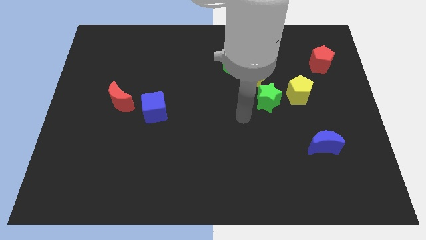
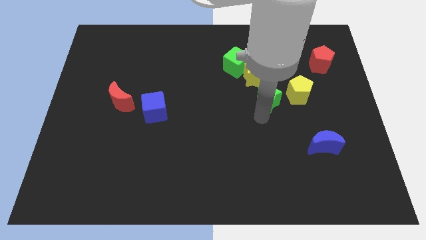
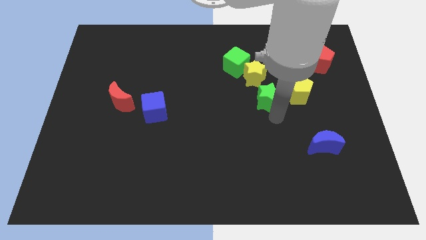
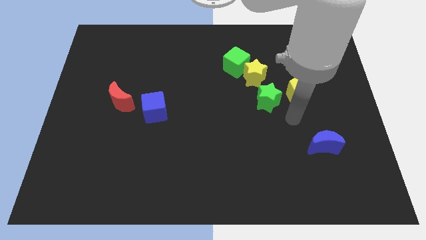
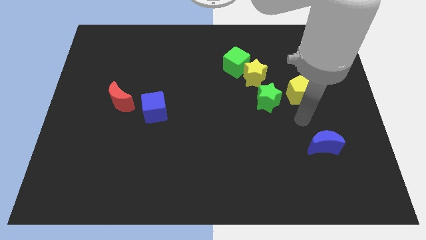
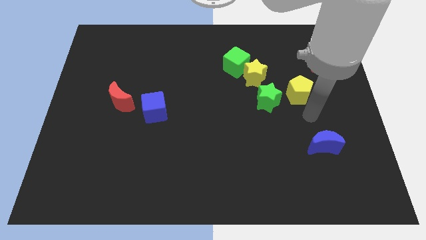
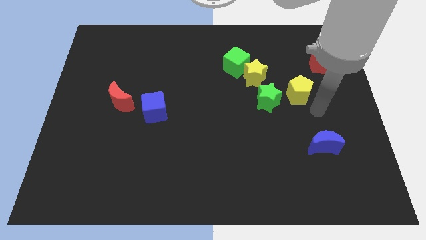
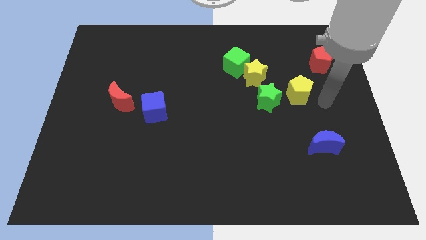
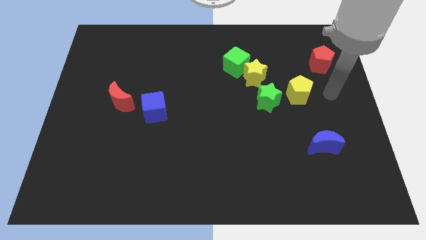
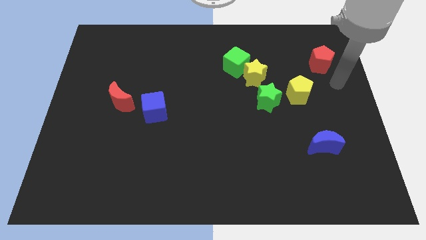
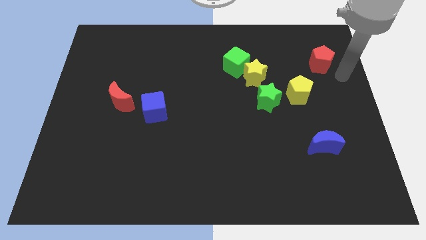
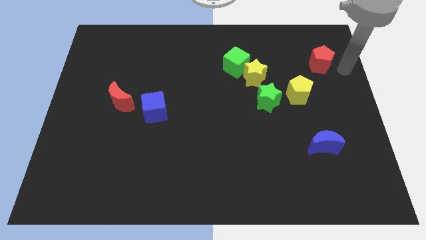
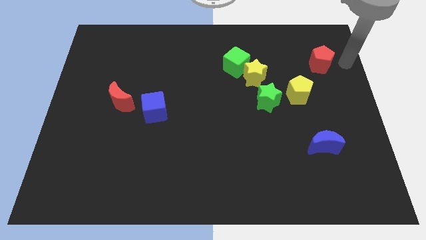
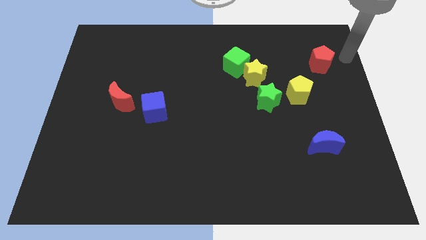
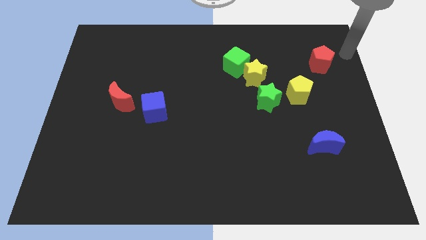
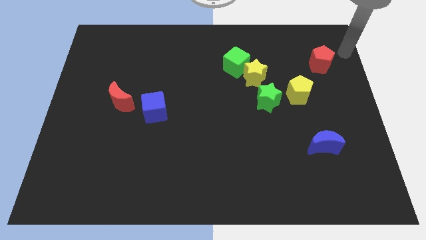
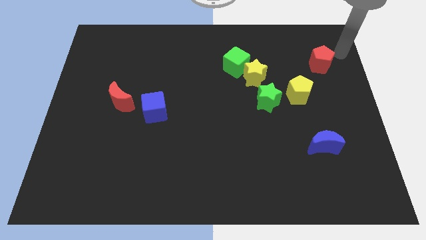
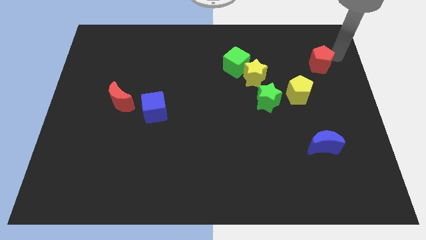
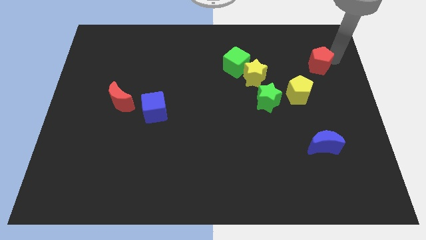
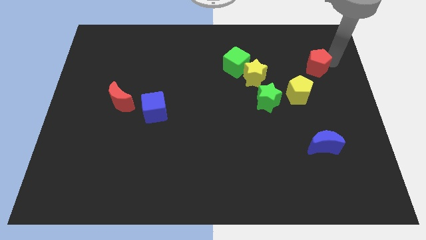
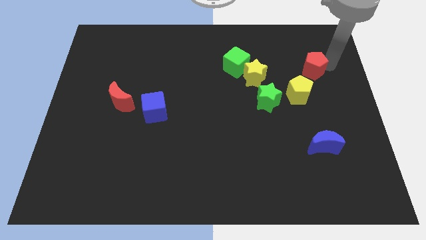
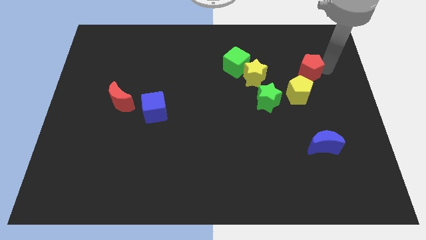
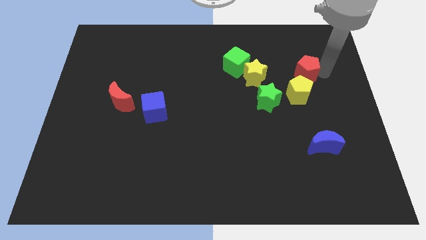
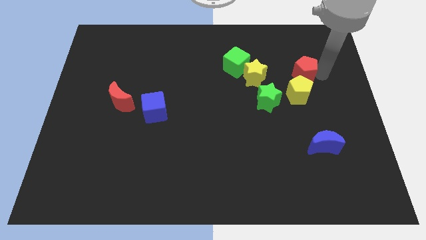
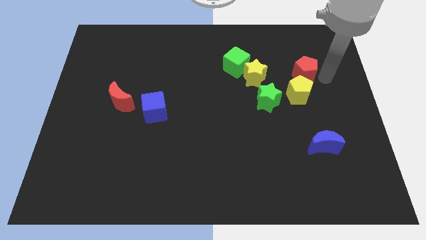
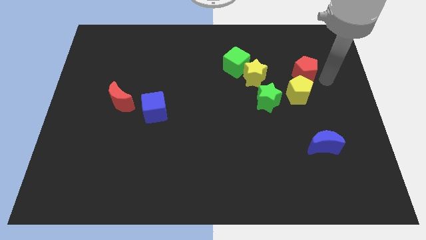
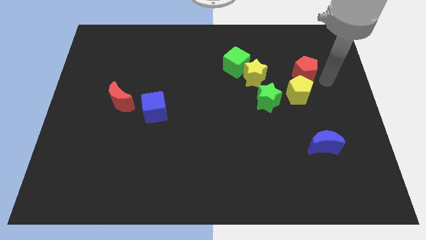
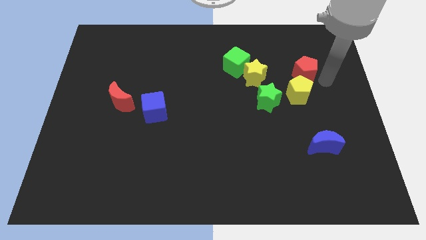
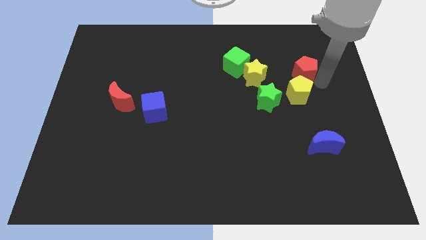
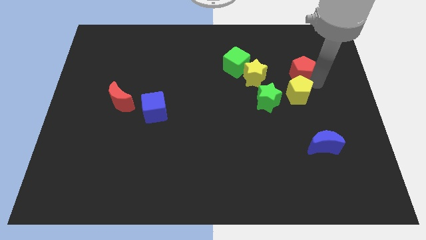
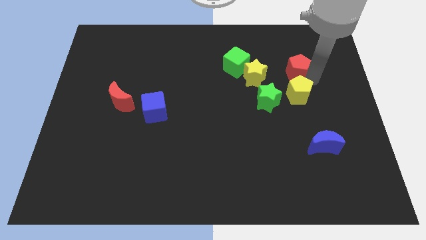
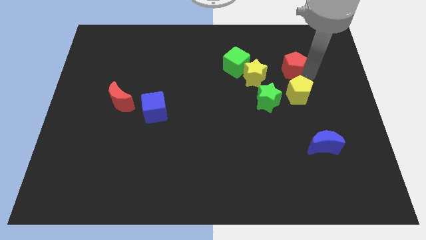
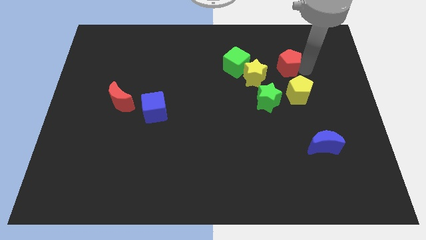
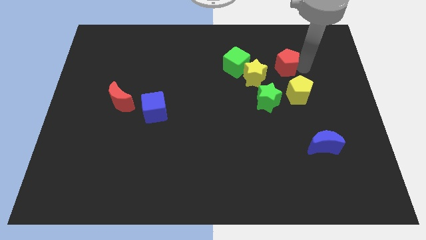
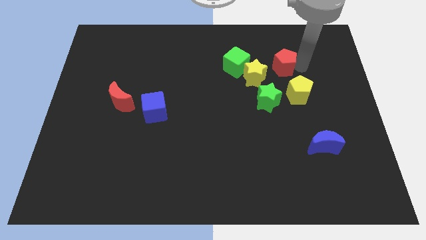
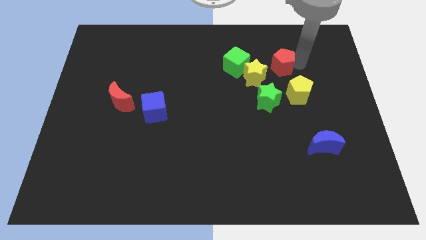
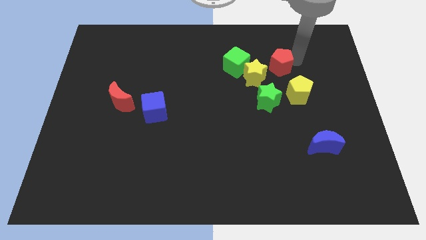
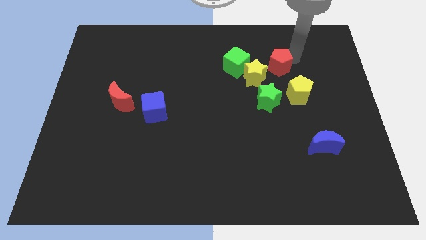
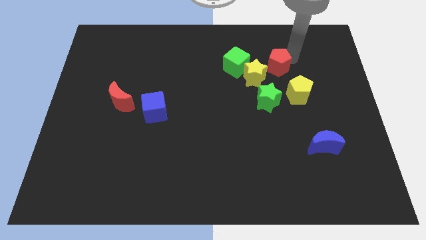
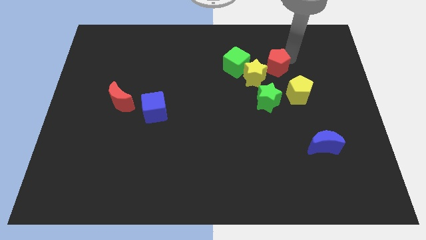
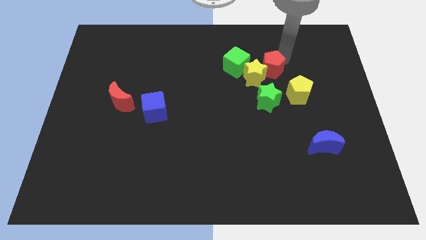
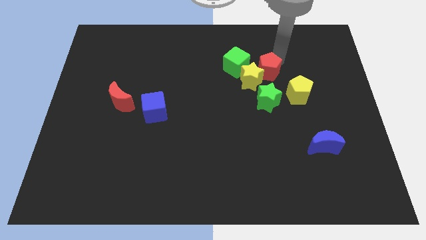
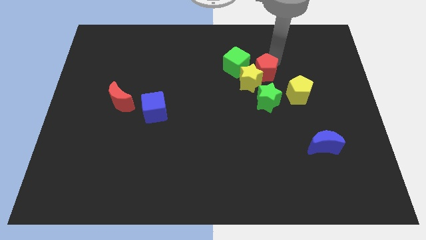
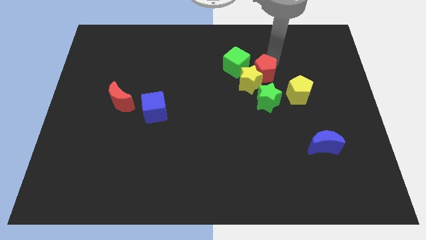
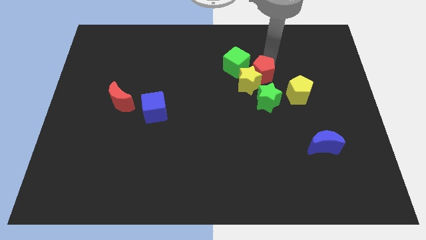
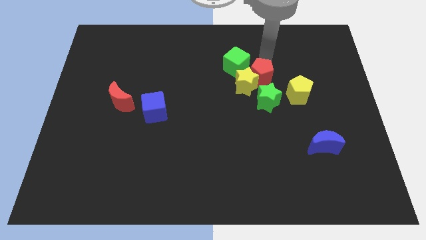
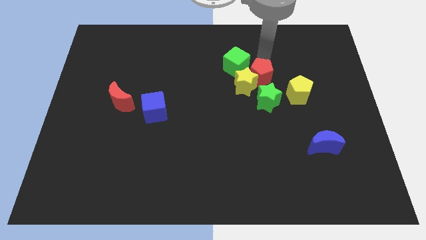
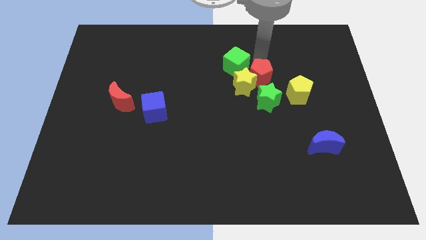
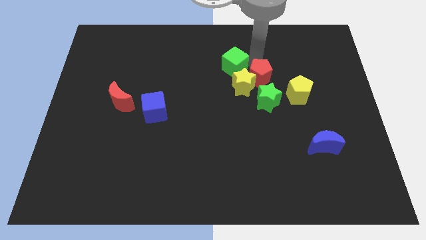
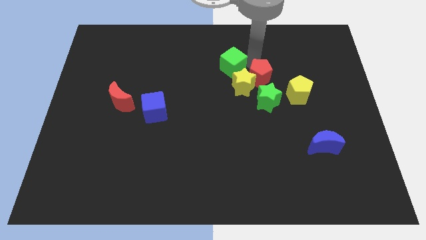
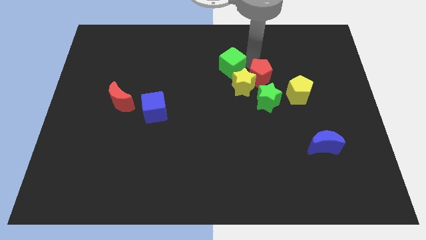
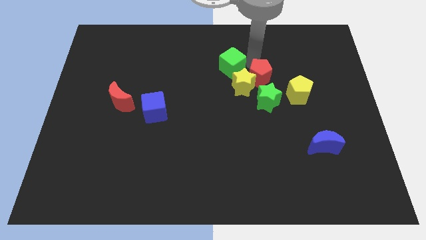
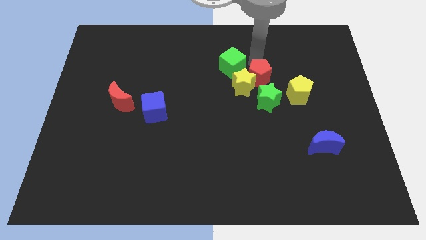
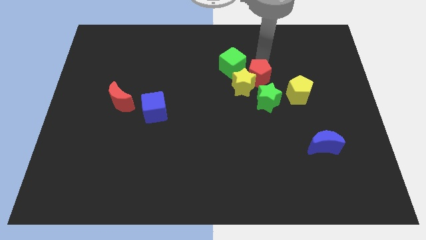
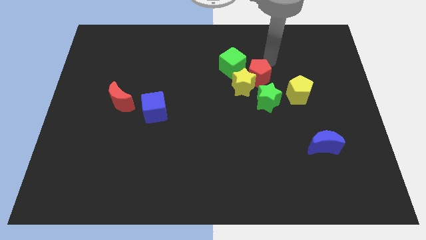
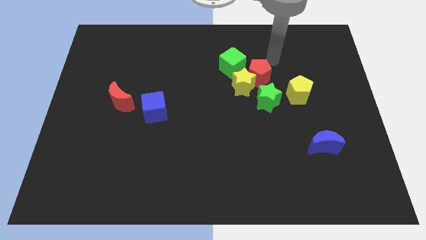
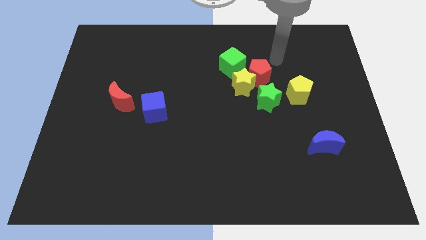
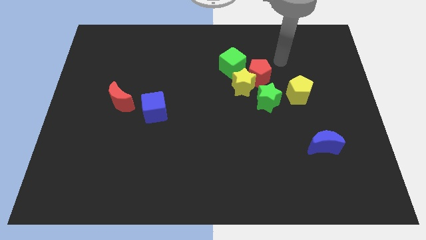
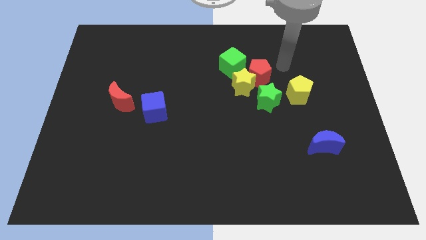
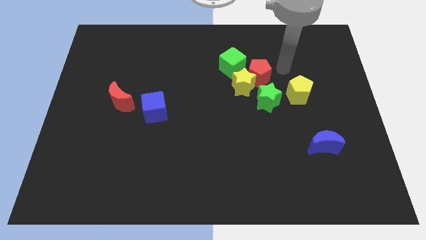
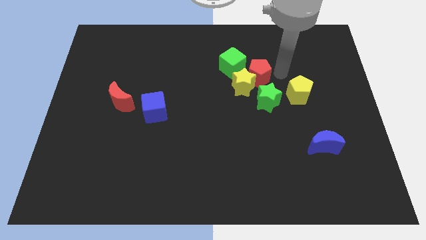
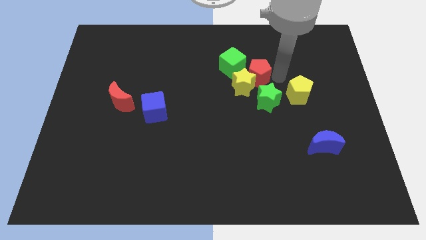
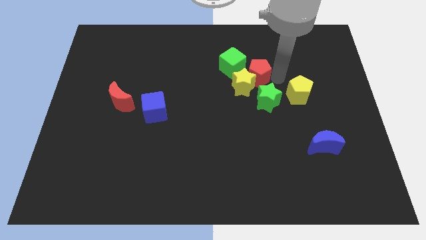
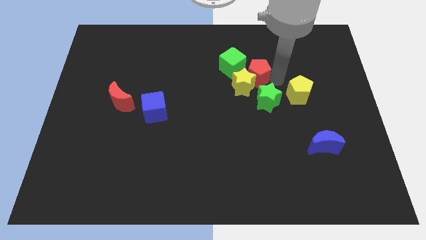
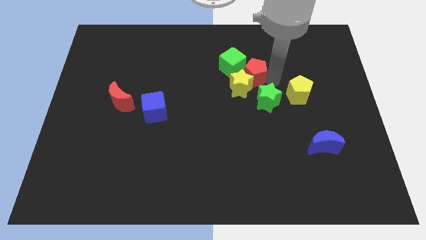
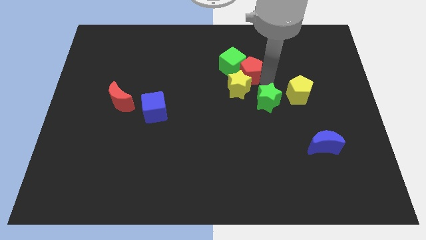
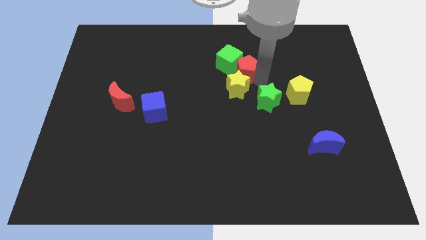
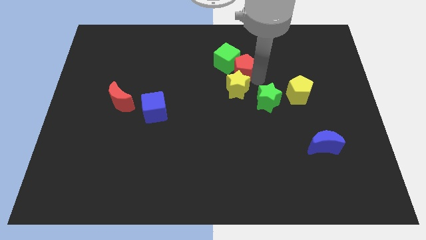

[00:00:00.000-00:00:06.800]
put the red pentagon close to the green cube

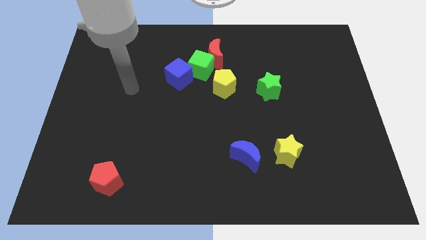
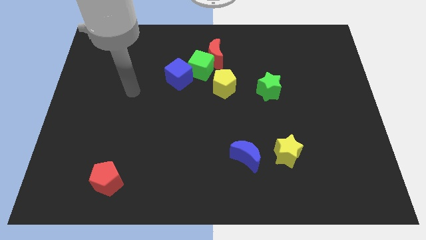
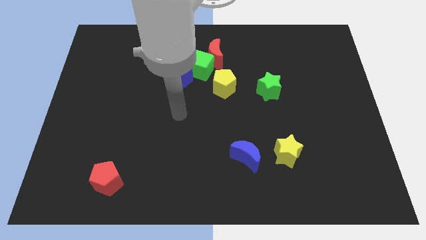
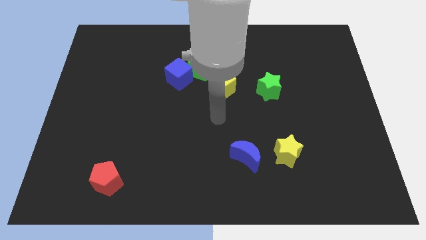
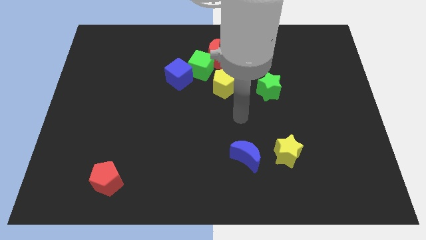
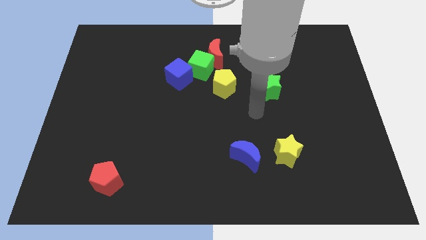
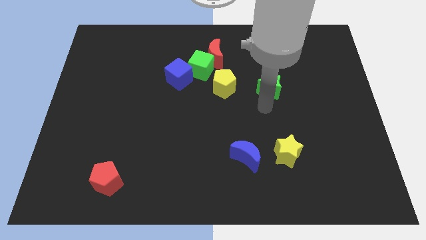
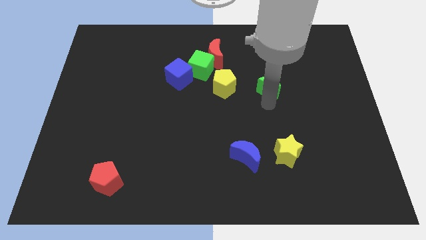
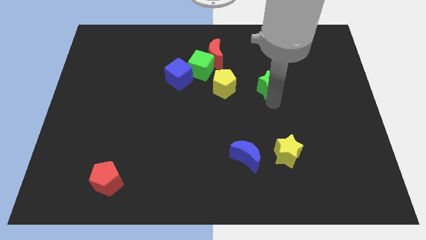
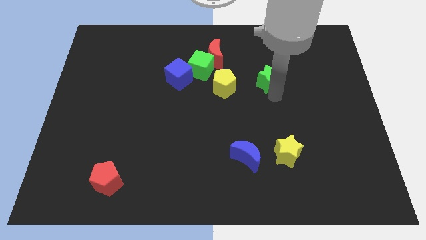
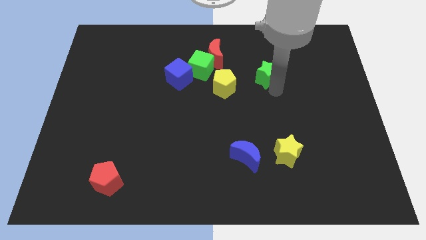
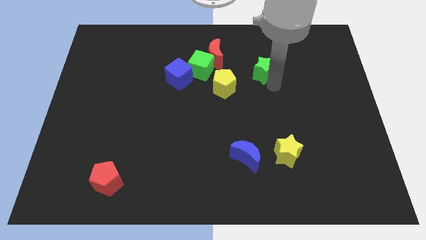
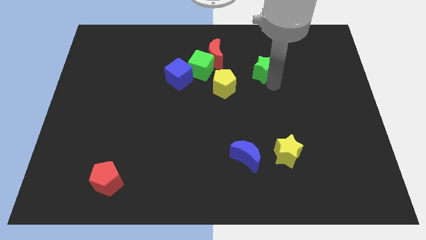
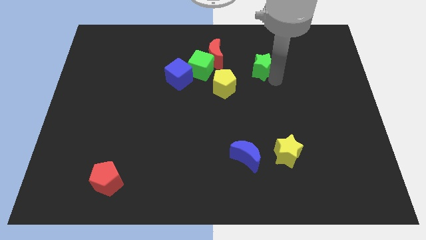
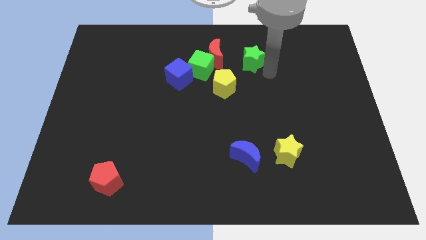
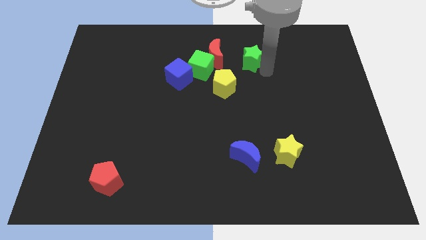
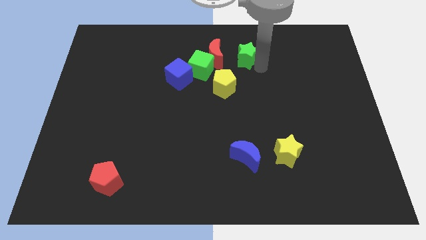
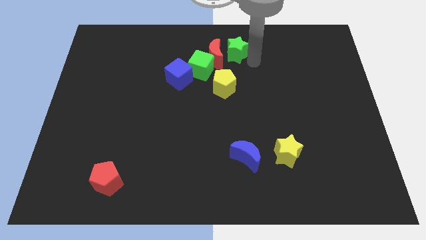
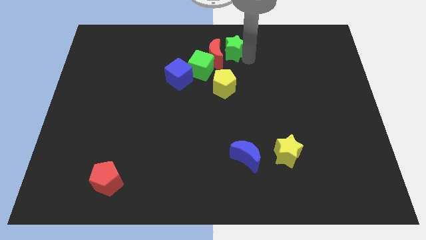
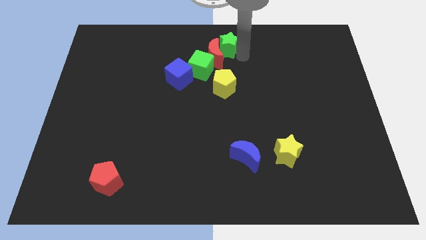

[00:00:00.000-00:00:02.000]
move the green star towards the red moon
